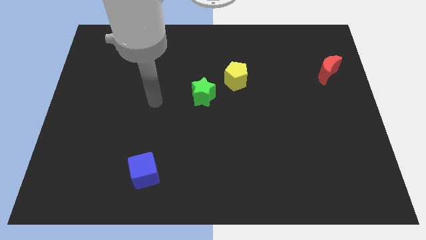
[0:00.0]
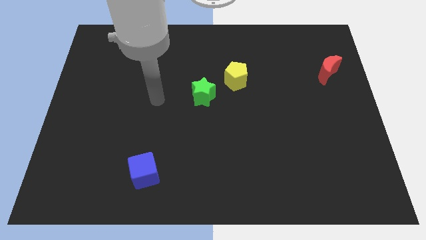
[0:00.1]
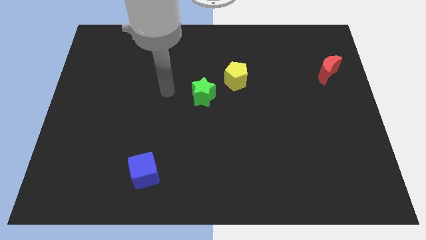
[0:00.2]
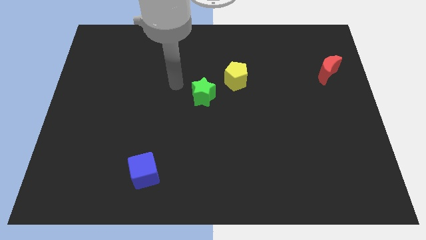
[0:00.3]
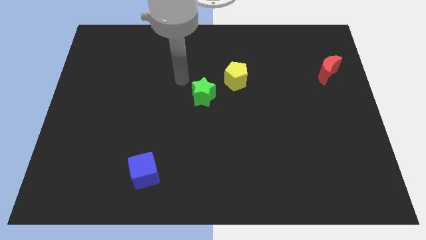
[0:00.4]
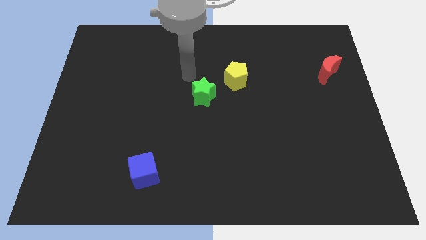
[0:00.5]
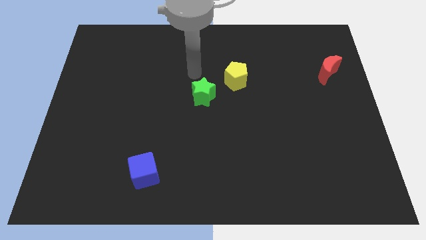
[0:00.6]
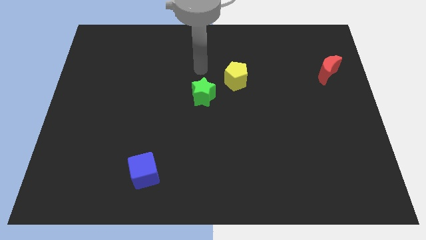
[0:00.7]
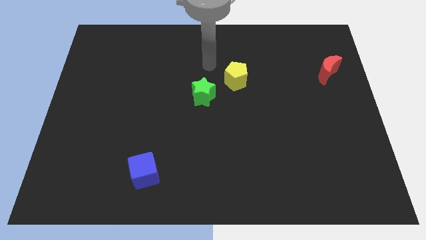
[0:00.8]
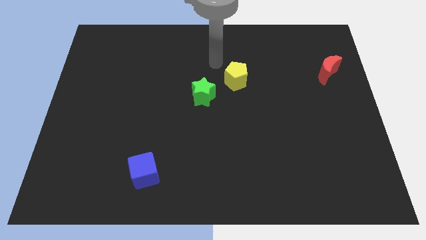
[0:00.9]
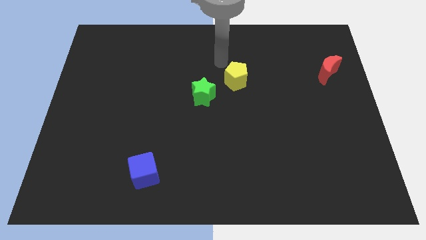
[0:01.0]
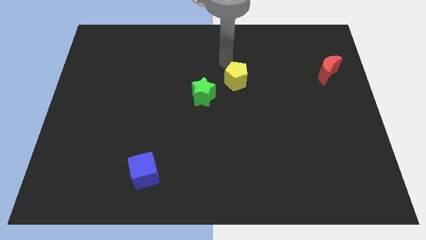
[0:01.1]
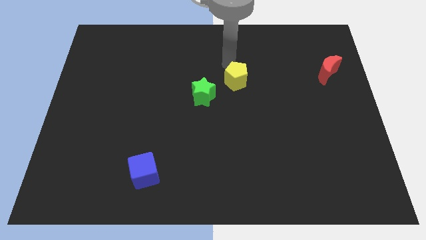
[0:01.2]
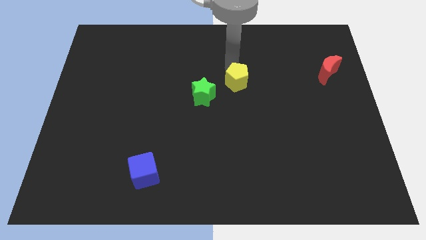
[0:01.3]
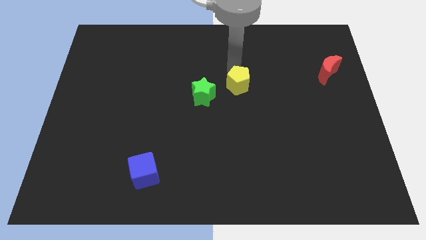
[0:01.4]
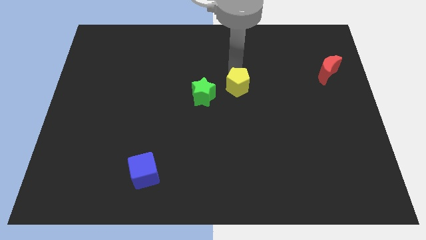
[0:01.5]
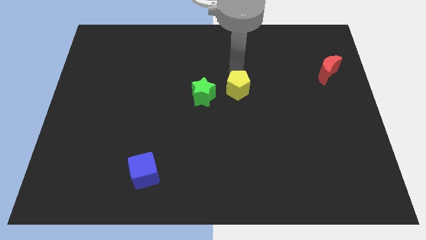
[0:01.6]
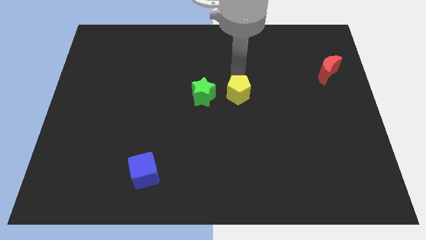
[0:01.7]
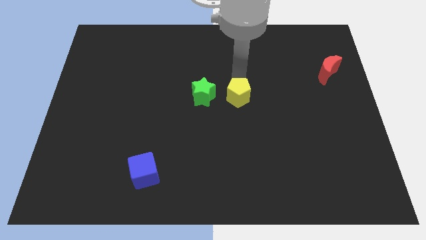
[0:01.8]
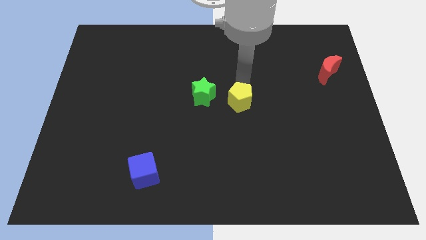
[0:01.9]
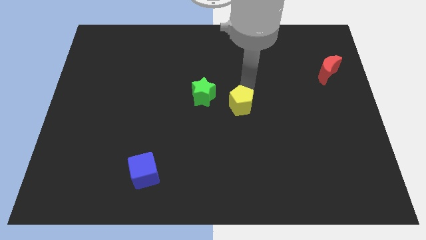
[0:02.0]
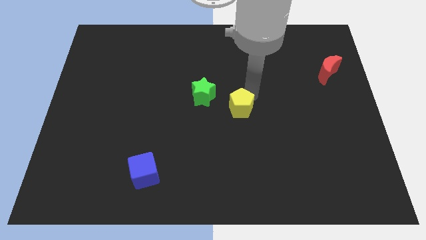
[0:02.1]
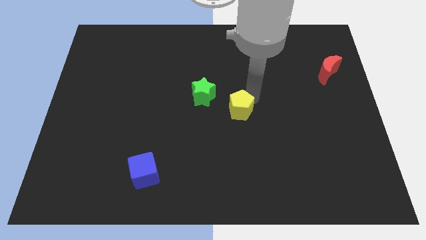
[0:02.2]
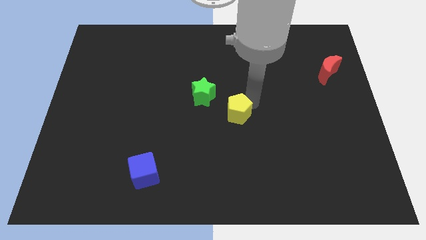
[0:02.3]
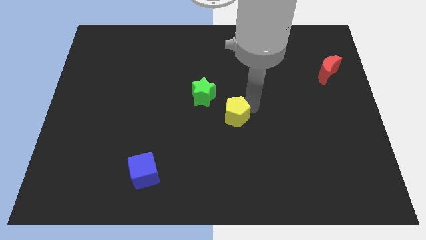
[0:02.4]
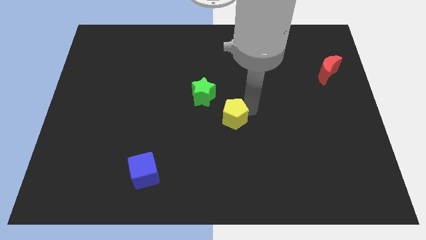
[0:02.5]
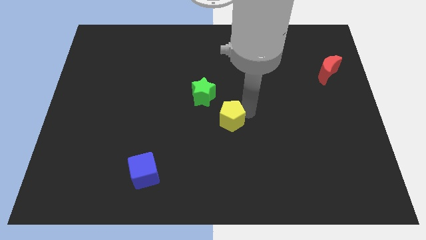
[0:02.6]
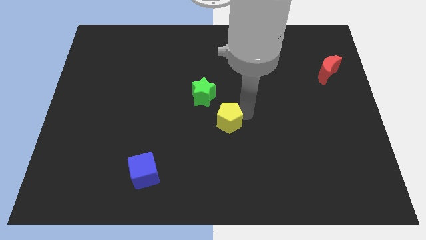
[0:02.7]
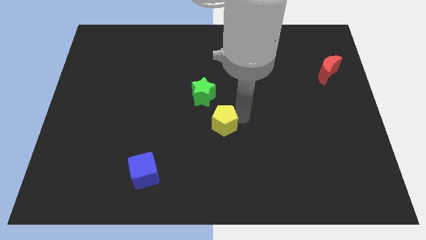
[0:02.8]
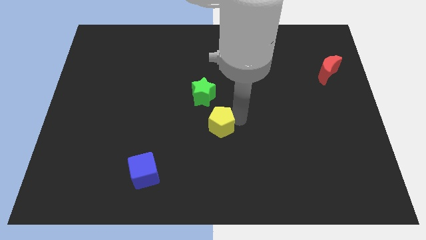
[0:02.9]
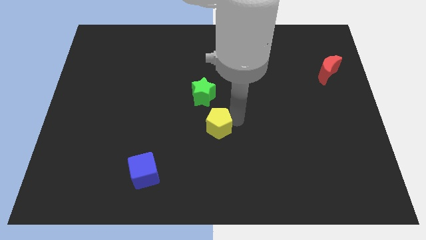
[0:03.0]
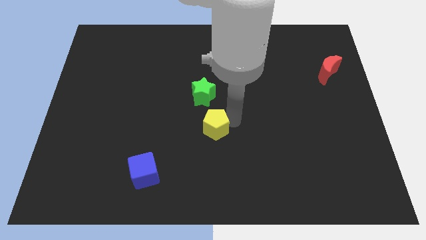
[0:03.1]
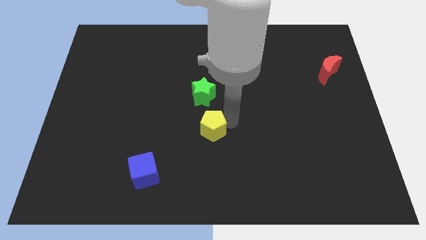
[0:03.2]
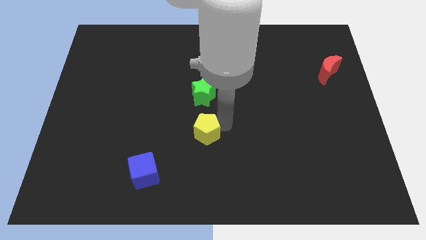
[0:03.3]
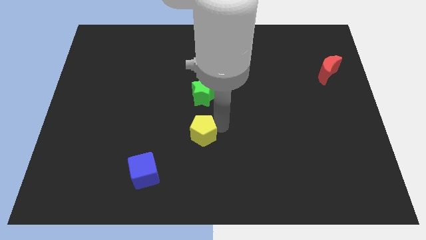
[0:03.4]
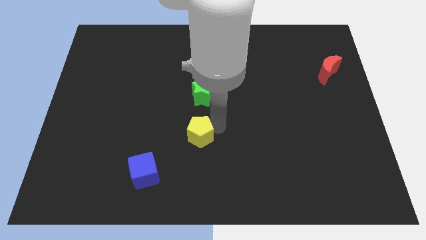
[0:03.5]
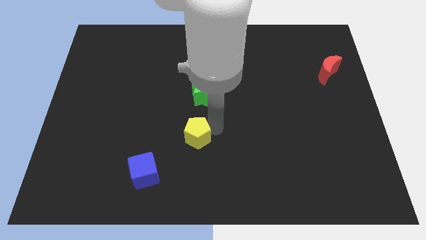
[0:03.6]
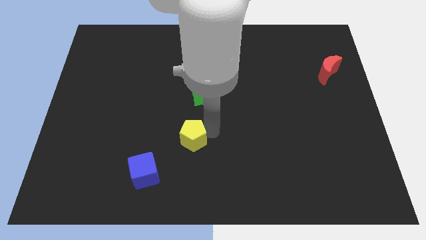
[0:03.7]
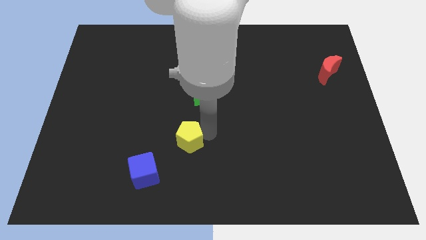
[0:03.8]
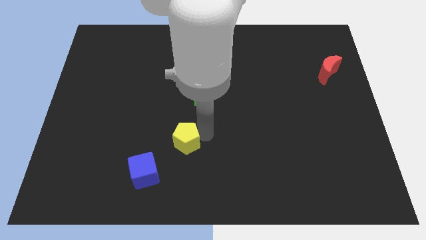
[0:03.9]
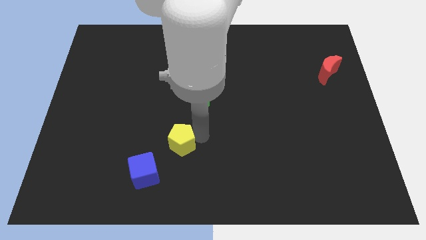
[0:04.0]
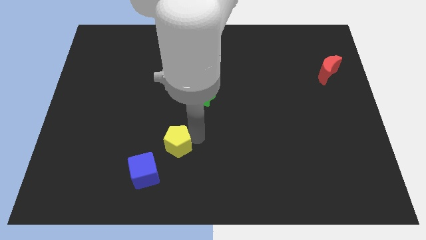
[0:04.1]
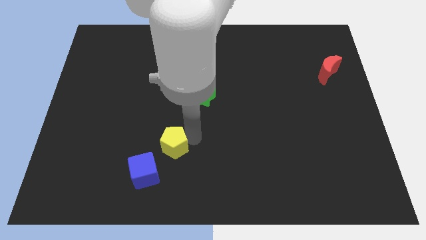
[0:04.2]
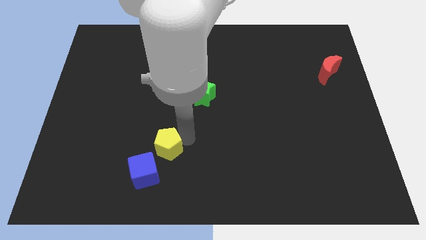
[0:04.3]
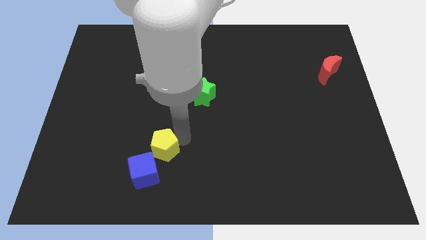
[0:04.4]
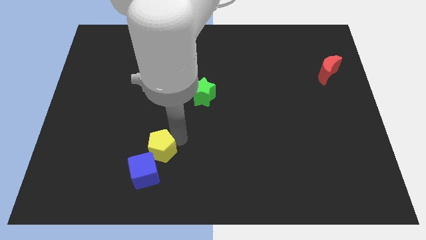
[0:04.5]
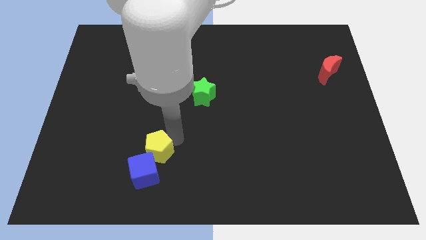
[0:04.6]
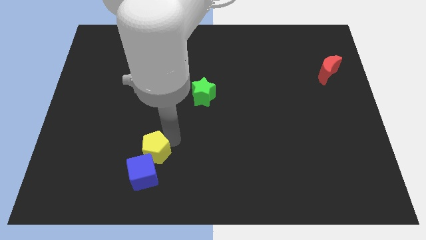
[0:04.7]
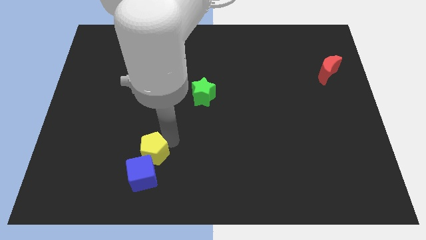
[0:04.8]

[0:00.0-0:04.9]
slide the yellow pentagon close to the blue cube

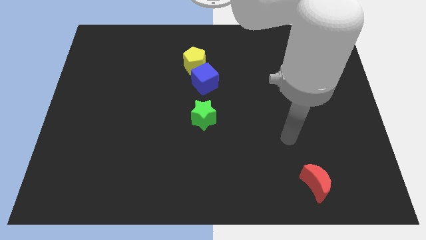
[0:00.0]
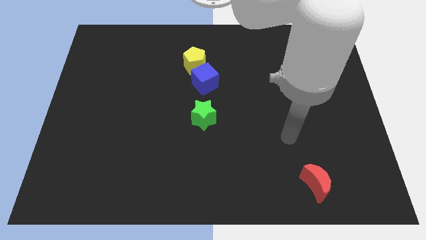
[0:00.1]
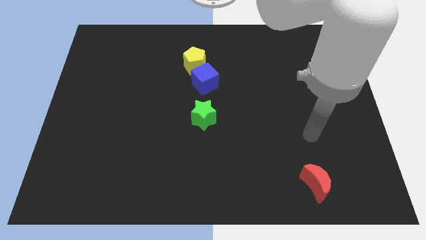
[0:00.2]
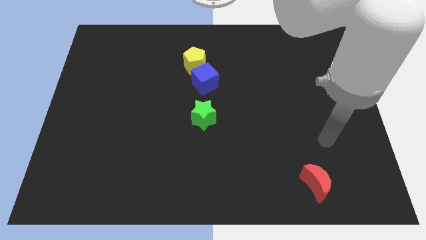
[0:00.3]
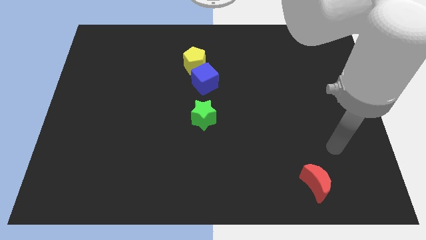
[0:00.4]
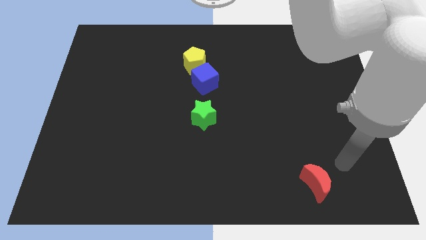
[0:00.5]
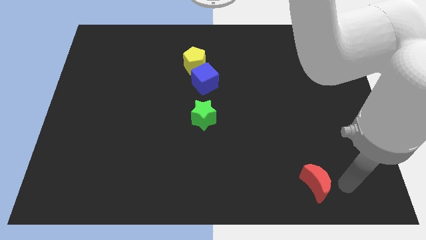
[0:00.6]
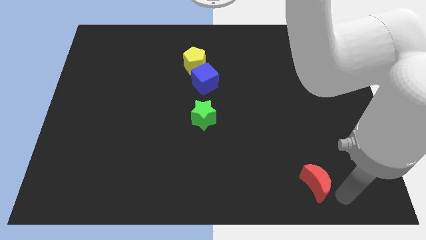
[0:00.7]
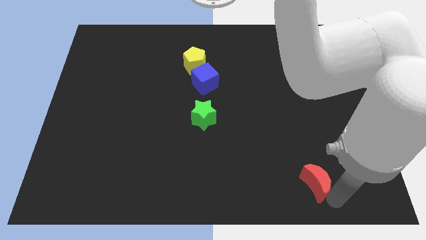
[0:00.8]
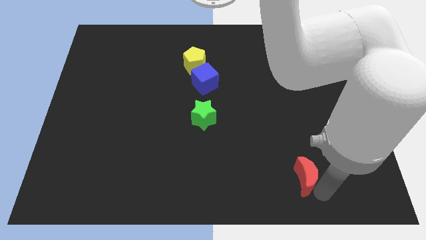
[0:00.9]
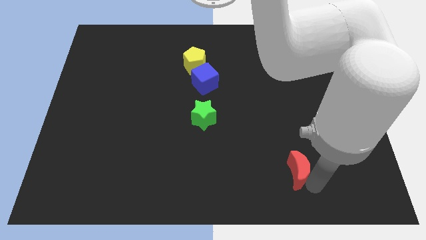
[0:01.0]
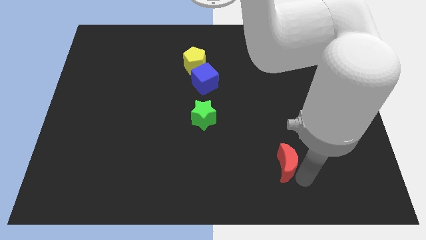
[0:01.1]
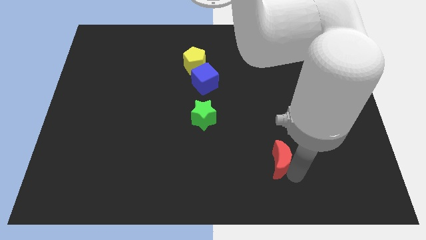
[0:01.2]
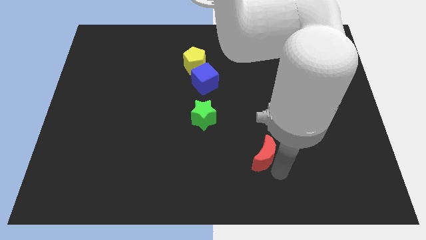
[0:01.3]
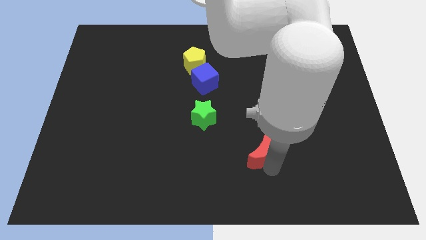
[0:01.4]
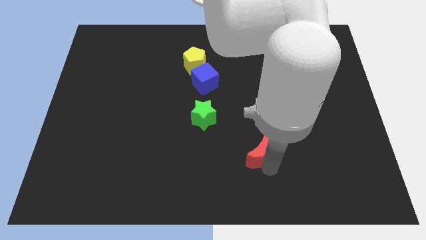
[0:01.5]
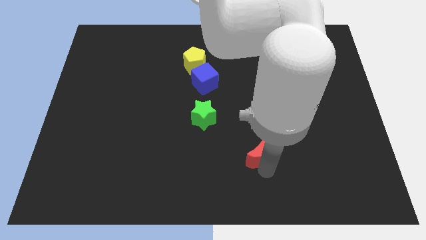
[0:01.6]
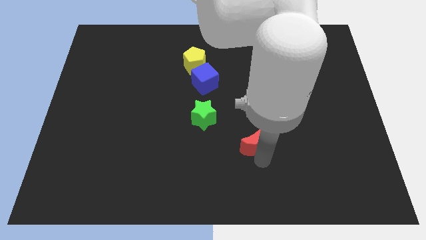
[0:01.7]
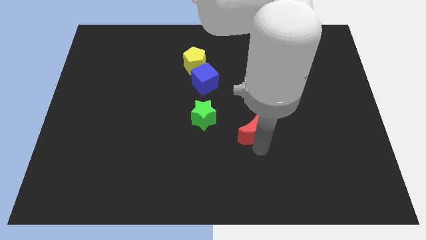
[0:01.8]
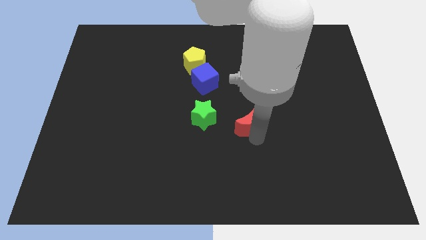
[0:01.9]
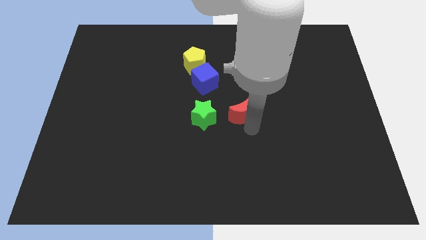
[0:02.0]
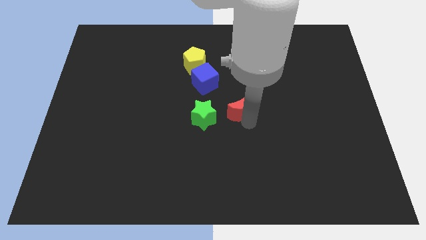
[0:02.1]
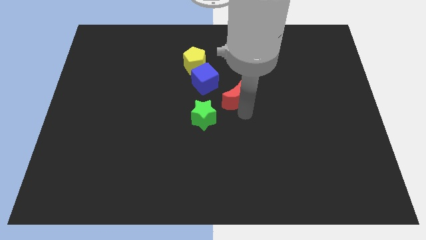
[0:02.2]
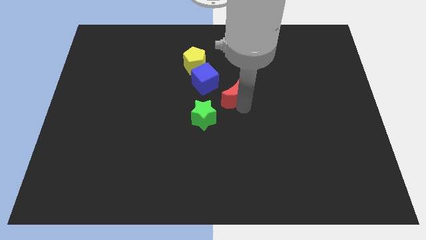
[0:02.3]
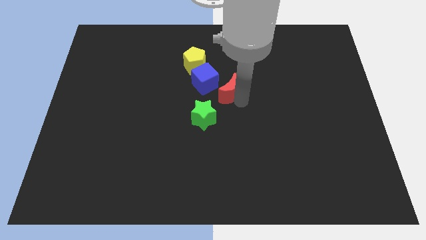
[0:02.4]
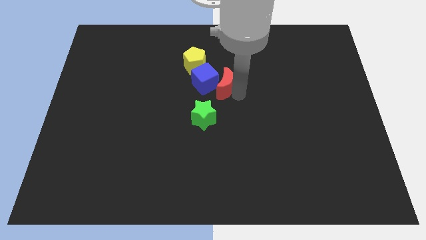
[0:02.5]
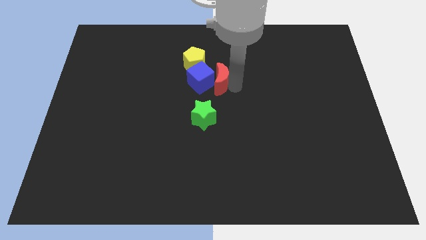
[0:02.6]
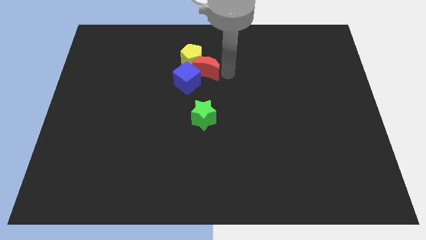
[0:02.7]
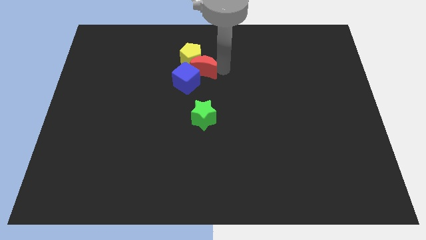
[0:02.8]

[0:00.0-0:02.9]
put the red block to the yellow pentagon

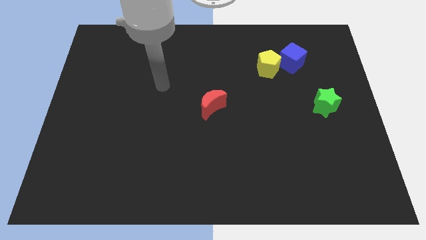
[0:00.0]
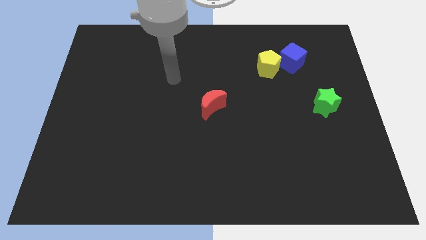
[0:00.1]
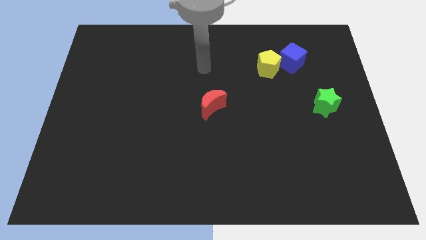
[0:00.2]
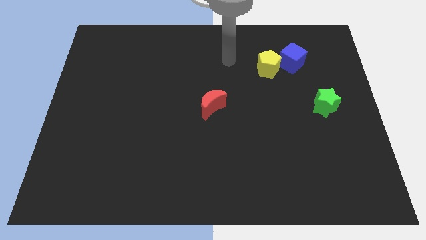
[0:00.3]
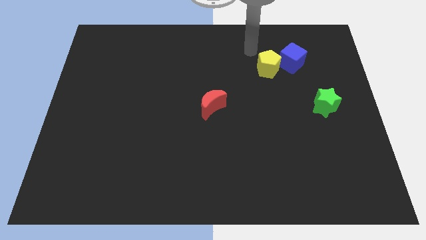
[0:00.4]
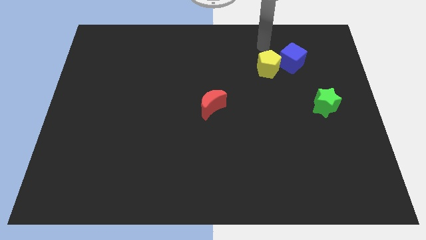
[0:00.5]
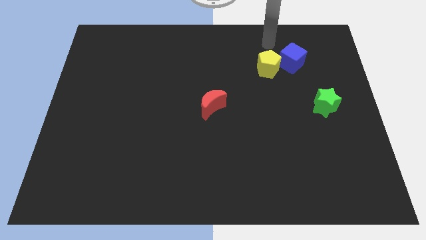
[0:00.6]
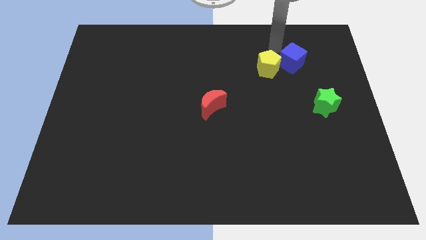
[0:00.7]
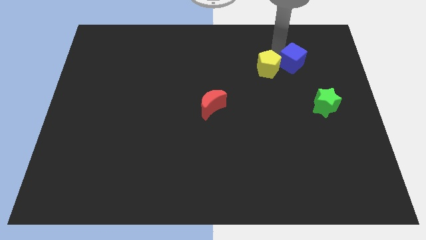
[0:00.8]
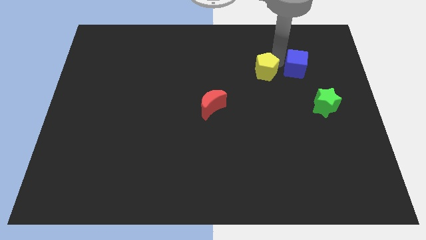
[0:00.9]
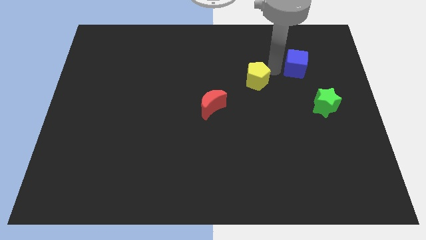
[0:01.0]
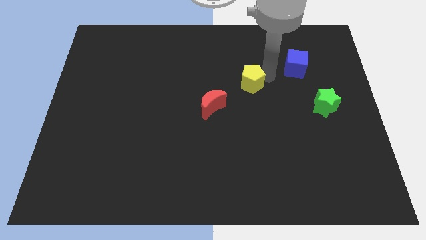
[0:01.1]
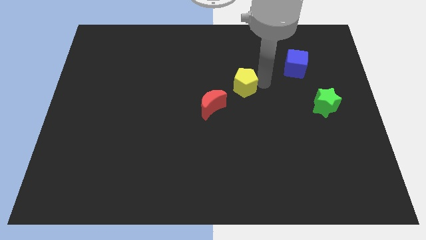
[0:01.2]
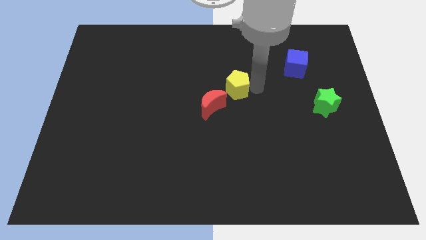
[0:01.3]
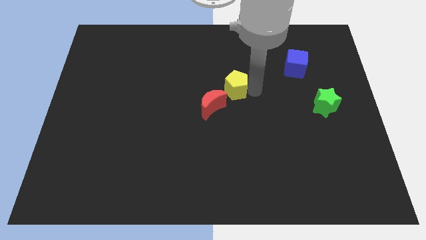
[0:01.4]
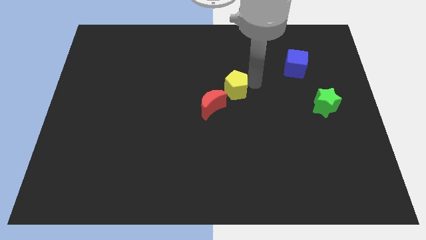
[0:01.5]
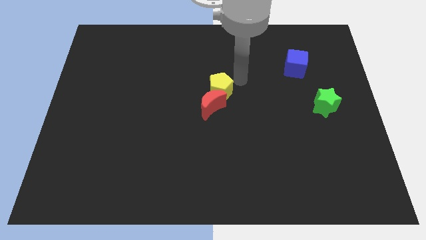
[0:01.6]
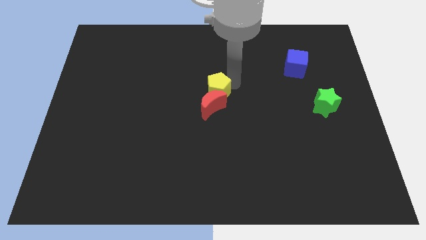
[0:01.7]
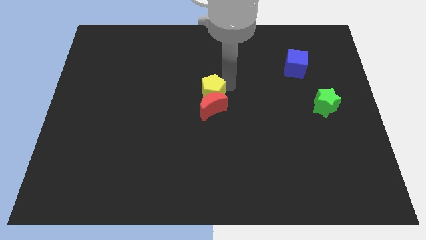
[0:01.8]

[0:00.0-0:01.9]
slide the pentagon towards the moon
